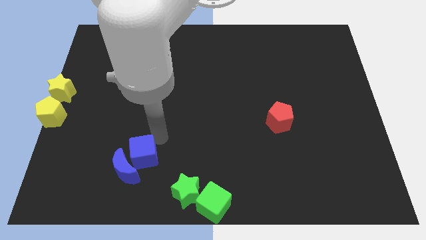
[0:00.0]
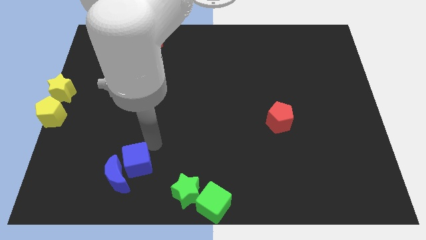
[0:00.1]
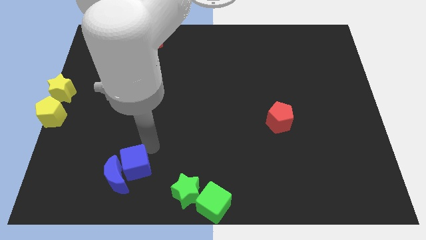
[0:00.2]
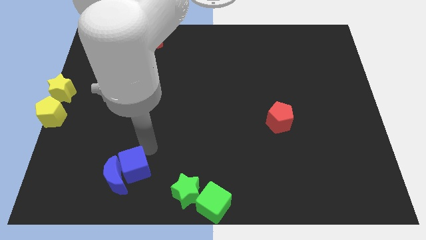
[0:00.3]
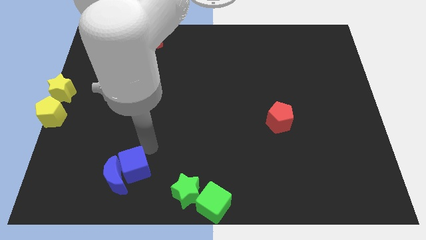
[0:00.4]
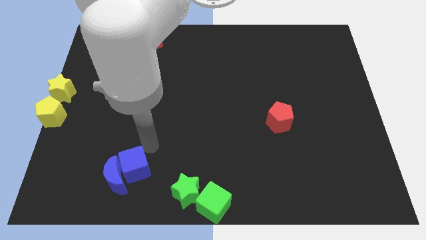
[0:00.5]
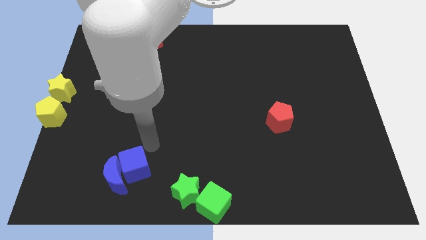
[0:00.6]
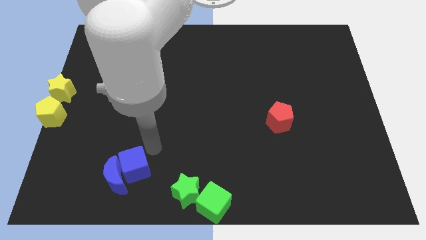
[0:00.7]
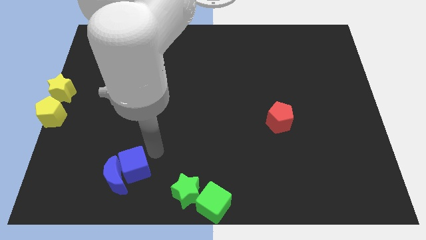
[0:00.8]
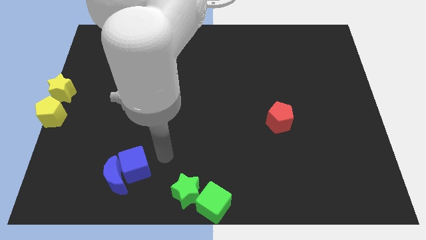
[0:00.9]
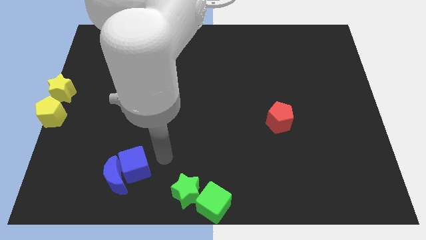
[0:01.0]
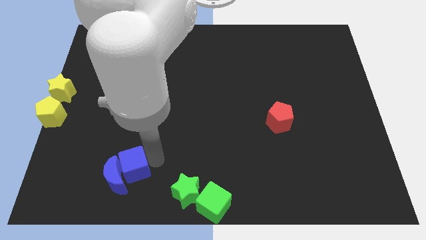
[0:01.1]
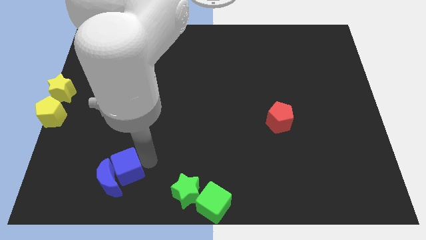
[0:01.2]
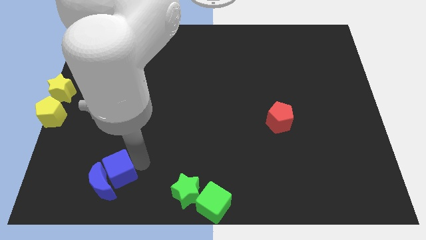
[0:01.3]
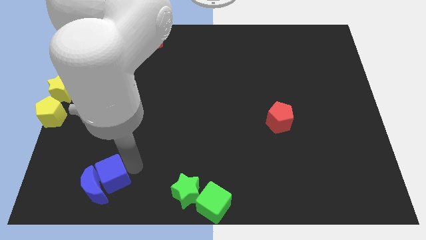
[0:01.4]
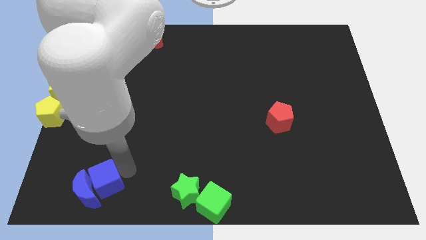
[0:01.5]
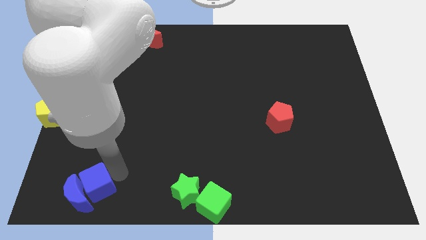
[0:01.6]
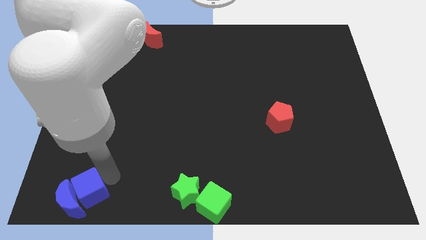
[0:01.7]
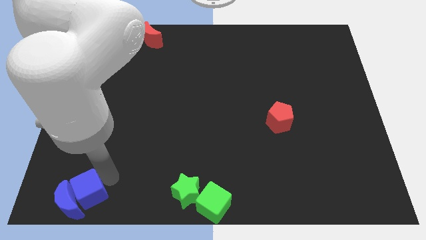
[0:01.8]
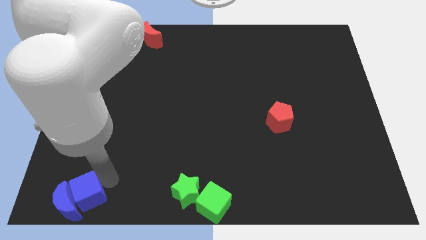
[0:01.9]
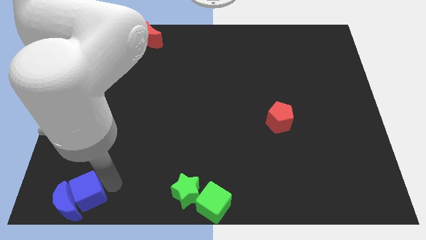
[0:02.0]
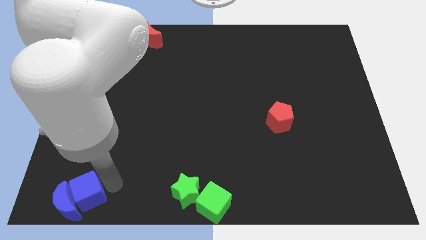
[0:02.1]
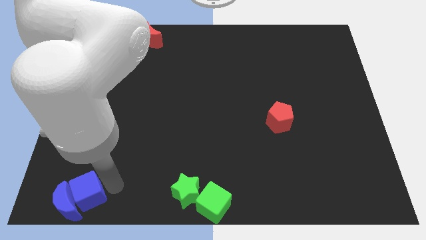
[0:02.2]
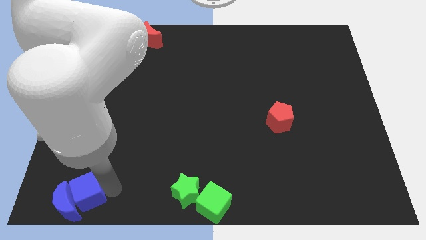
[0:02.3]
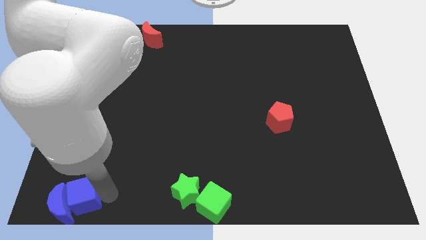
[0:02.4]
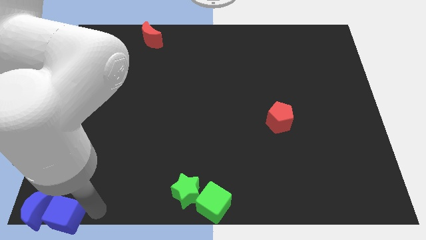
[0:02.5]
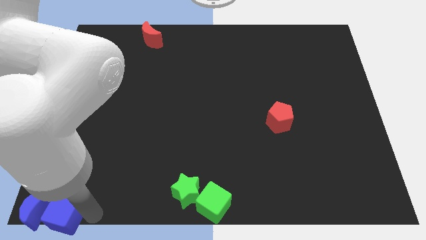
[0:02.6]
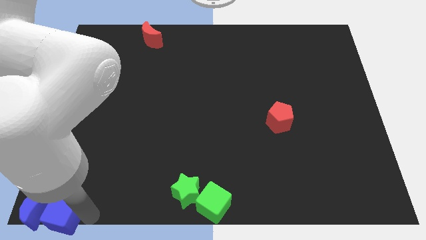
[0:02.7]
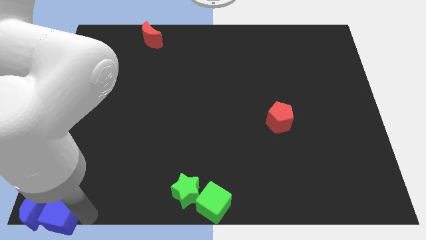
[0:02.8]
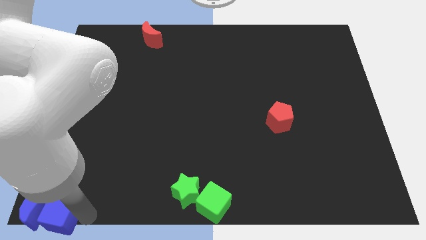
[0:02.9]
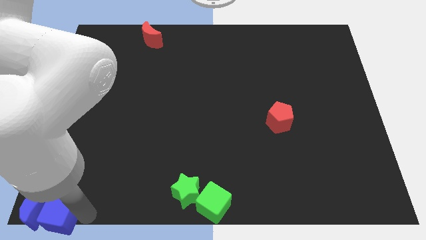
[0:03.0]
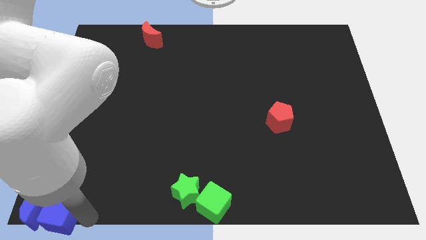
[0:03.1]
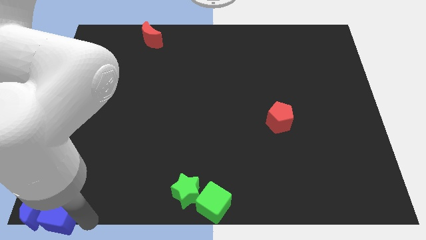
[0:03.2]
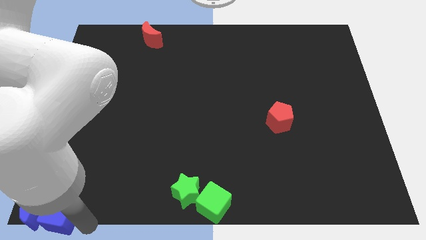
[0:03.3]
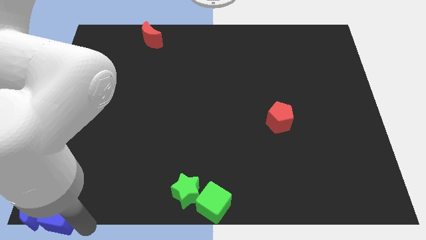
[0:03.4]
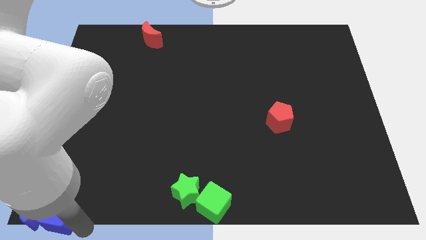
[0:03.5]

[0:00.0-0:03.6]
place the blue blocks at the bottom left corner

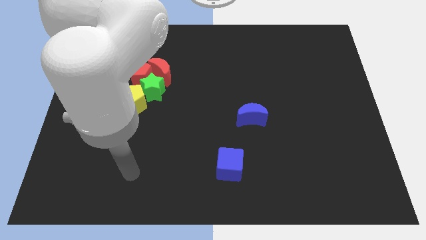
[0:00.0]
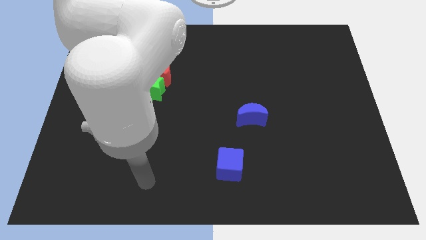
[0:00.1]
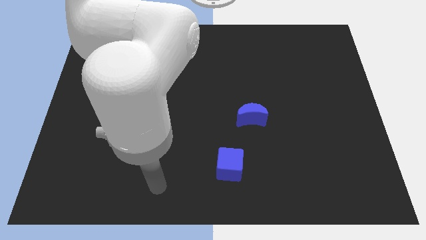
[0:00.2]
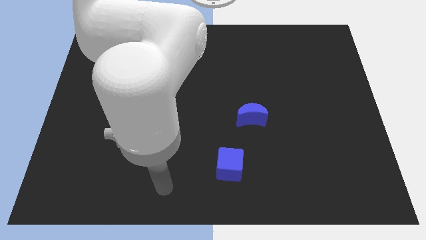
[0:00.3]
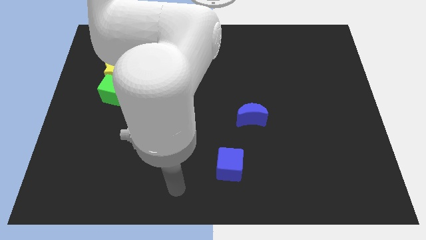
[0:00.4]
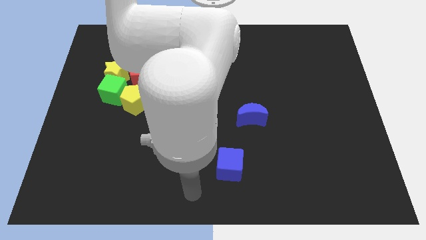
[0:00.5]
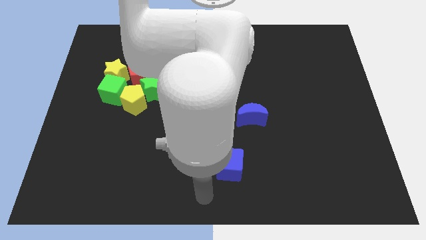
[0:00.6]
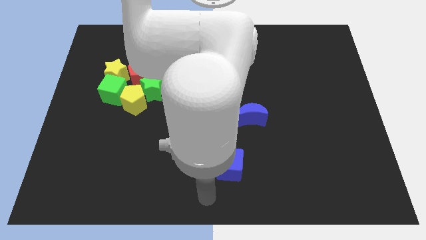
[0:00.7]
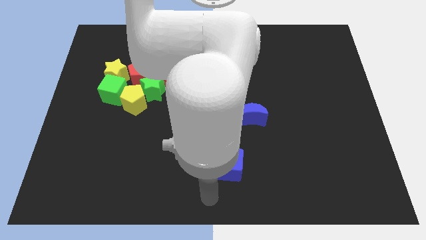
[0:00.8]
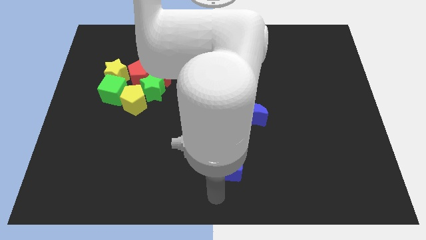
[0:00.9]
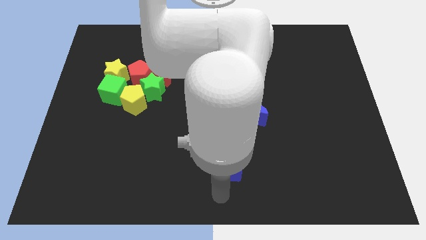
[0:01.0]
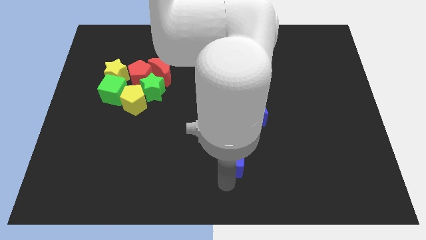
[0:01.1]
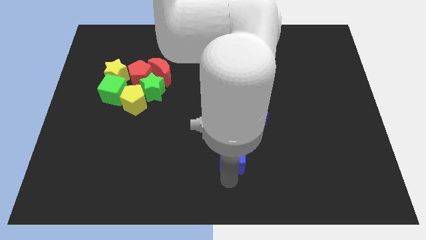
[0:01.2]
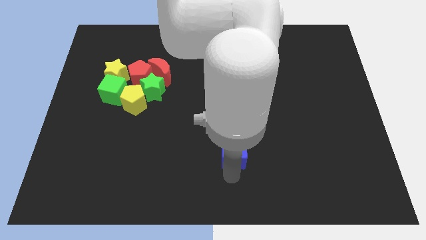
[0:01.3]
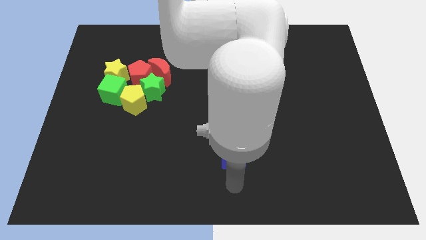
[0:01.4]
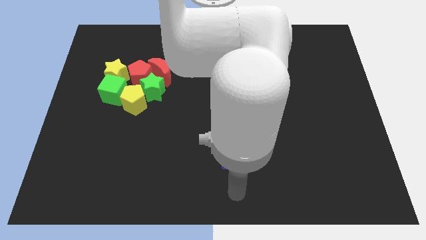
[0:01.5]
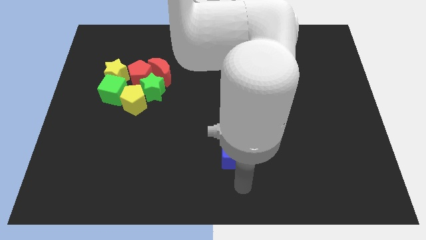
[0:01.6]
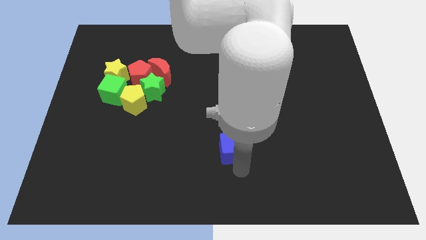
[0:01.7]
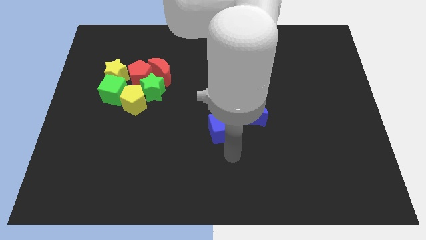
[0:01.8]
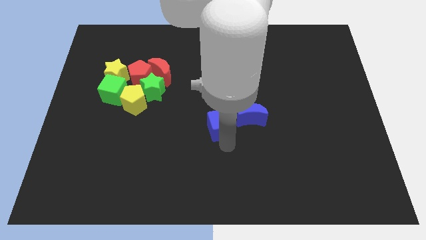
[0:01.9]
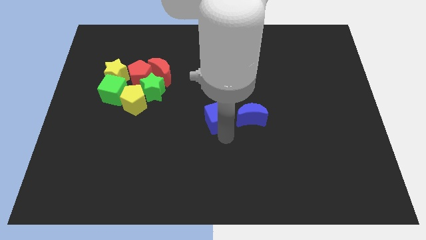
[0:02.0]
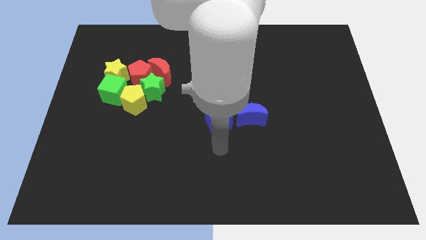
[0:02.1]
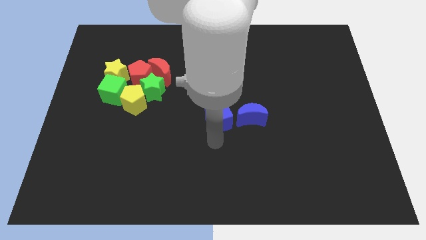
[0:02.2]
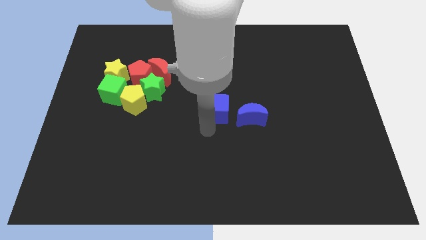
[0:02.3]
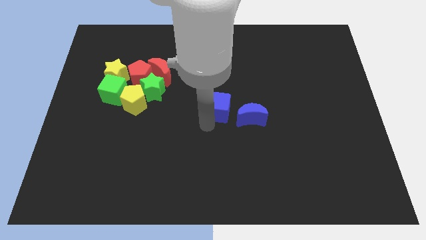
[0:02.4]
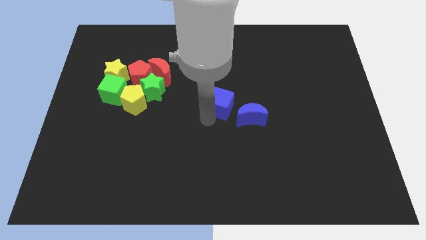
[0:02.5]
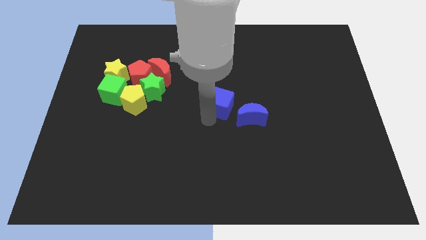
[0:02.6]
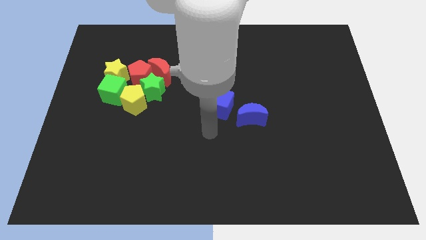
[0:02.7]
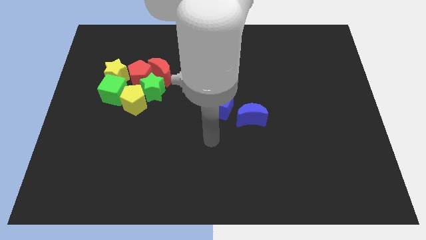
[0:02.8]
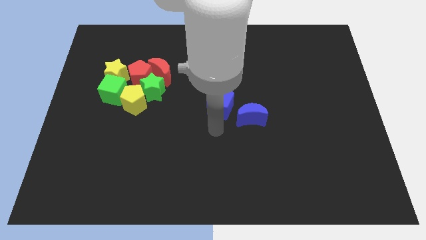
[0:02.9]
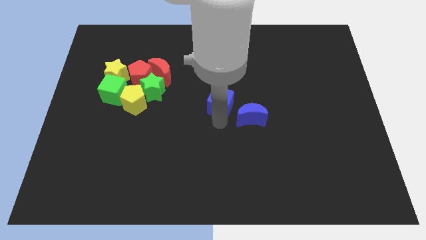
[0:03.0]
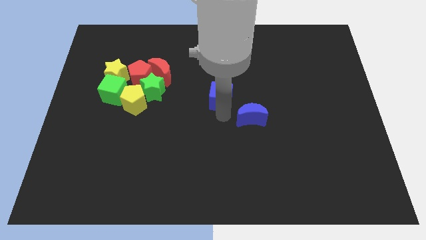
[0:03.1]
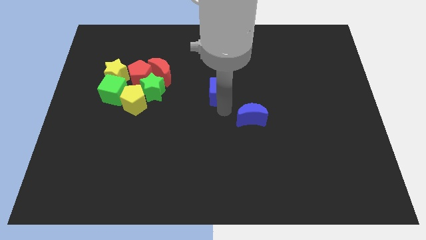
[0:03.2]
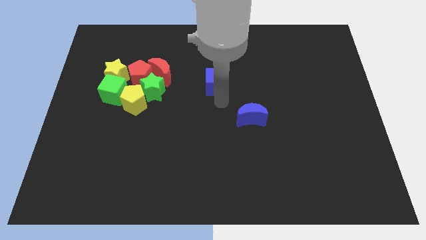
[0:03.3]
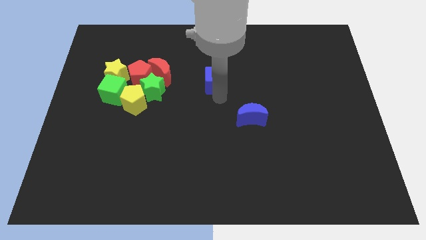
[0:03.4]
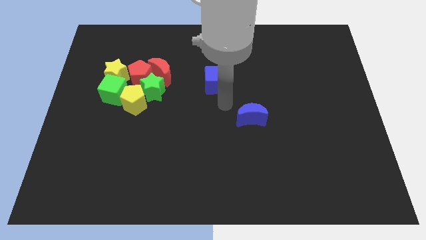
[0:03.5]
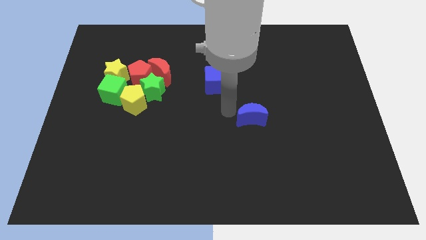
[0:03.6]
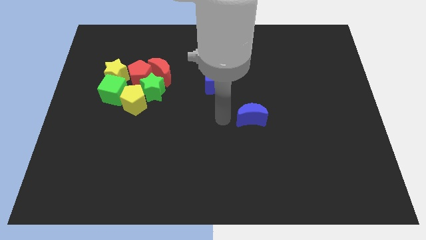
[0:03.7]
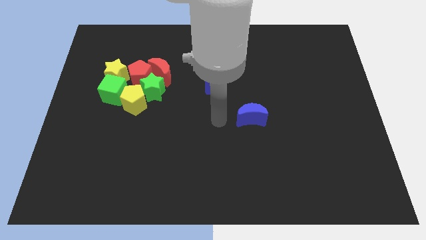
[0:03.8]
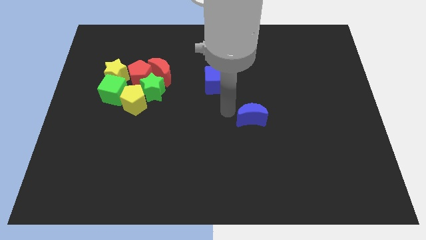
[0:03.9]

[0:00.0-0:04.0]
push the blue cube towards the top of the board

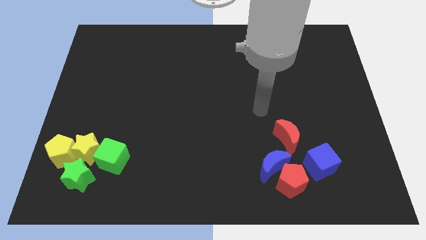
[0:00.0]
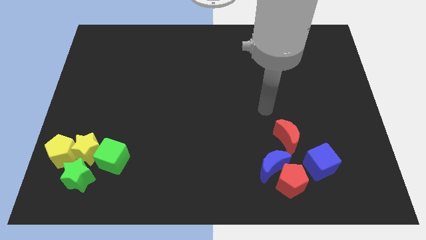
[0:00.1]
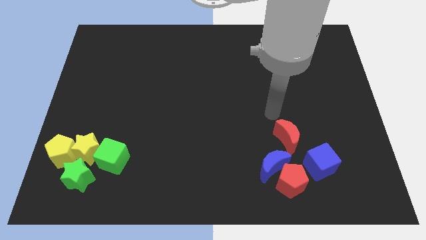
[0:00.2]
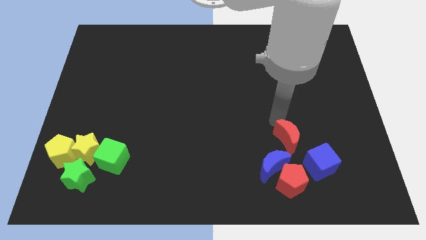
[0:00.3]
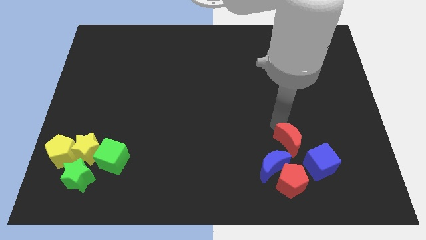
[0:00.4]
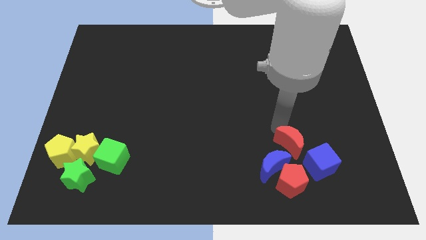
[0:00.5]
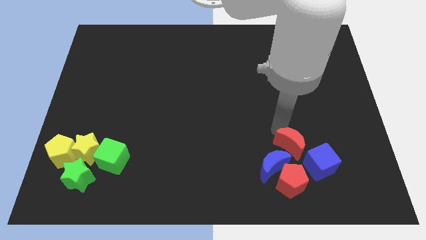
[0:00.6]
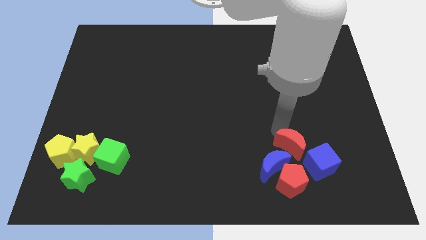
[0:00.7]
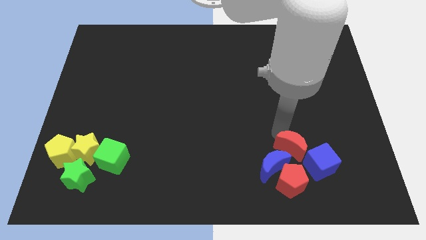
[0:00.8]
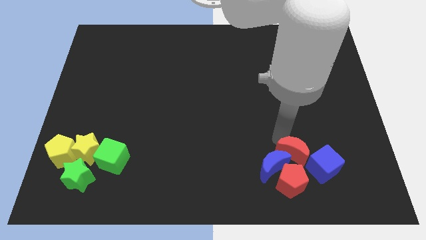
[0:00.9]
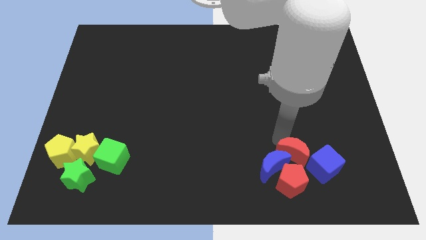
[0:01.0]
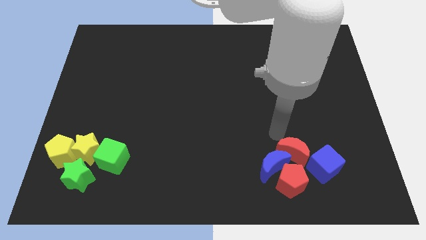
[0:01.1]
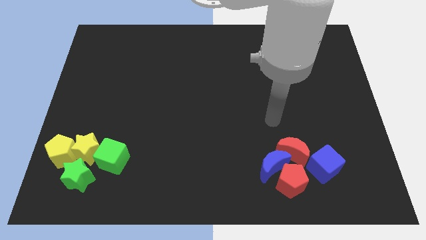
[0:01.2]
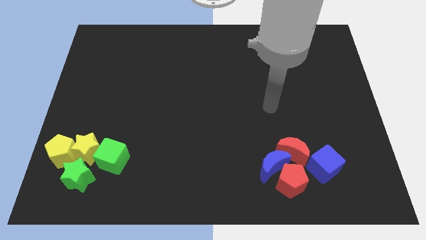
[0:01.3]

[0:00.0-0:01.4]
push the red crescent on the top of the red pentagon
